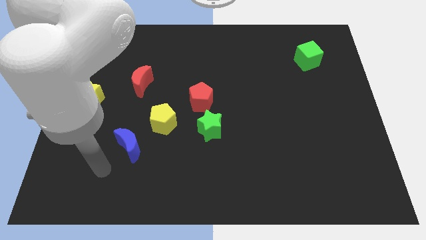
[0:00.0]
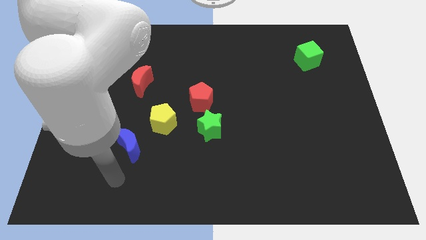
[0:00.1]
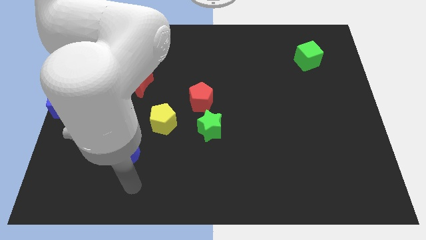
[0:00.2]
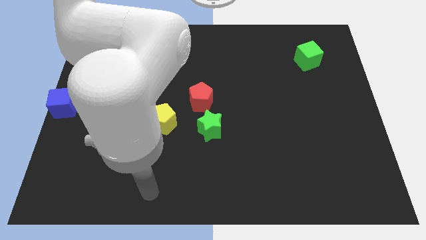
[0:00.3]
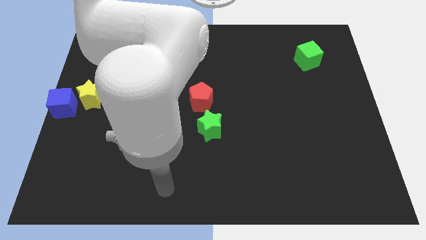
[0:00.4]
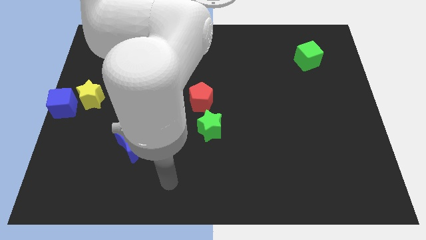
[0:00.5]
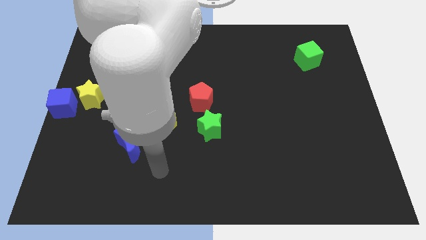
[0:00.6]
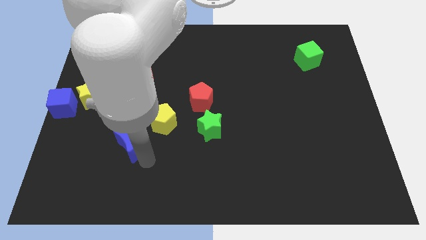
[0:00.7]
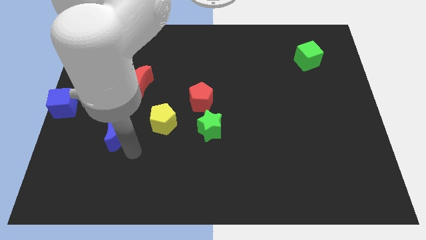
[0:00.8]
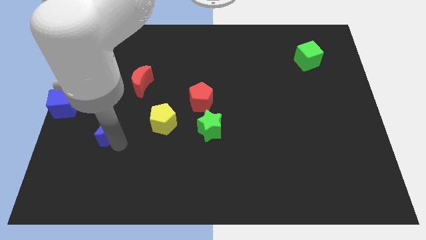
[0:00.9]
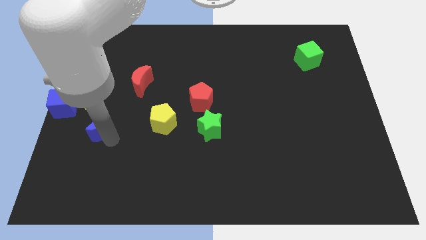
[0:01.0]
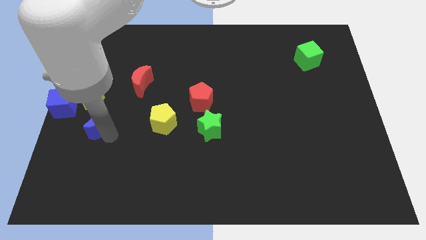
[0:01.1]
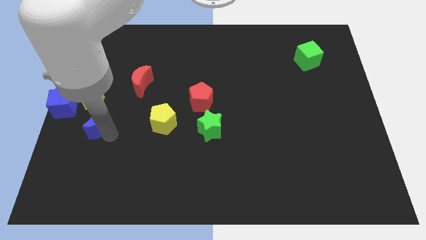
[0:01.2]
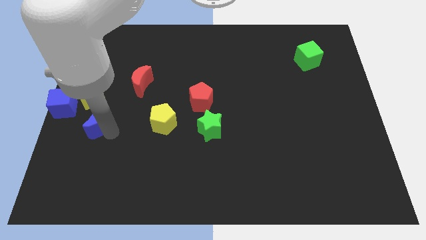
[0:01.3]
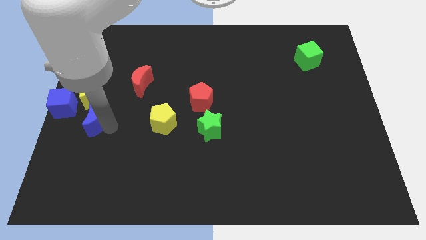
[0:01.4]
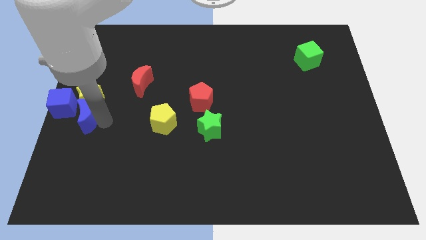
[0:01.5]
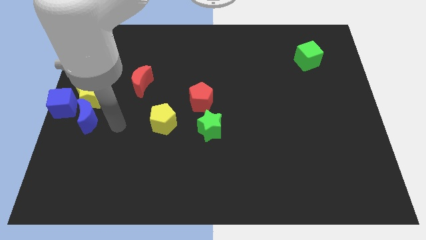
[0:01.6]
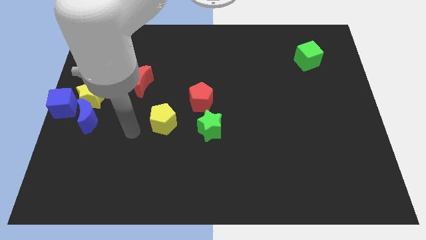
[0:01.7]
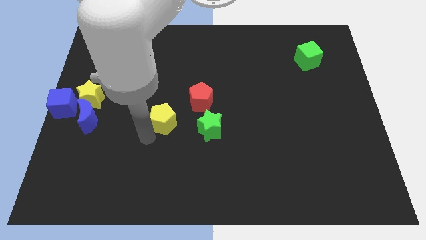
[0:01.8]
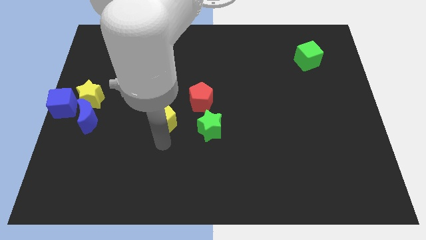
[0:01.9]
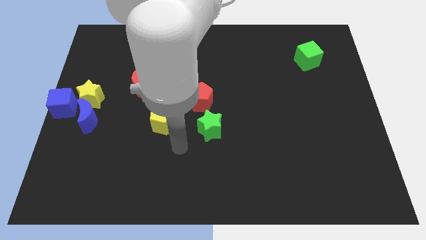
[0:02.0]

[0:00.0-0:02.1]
move blue moon below the yellow star

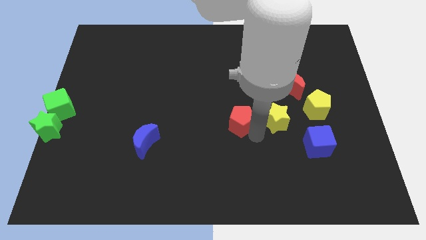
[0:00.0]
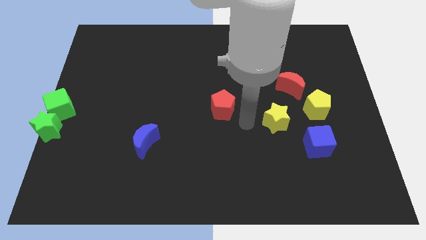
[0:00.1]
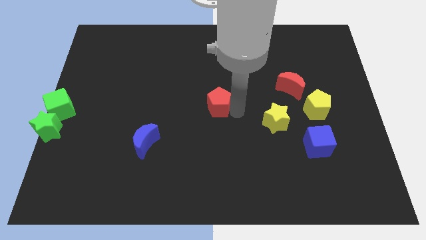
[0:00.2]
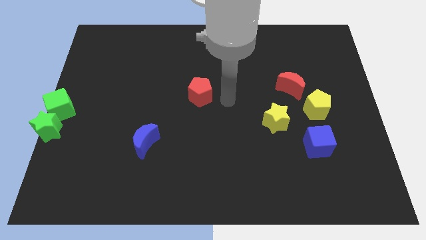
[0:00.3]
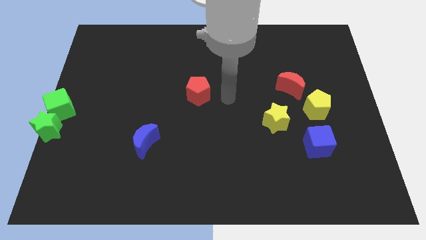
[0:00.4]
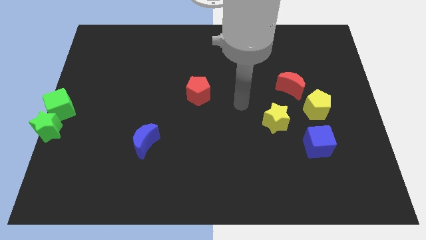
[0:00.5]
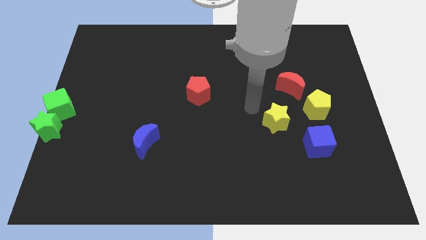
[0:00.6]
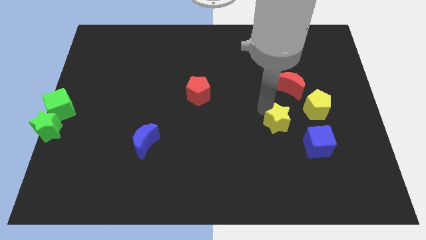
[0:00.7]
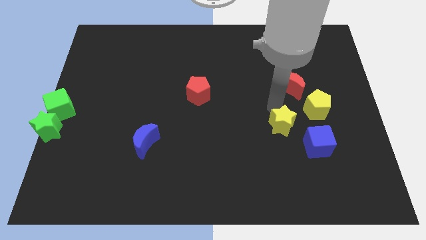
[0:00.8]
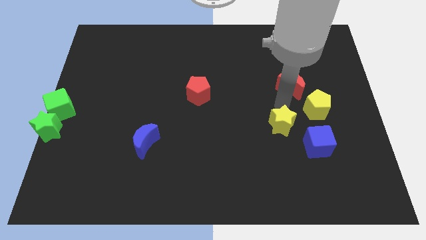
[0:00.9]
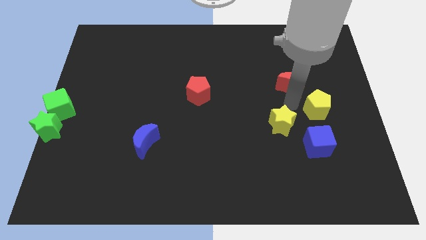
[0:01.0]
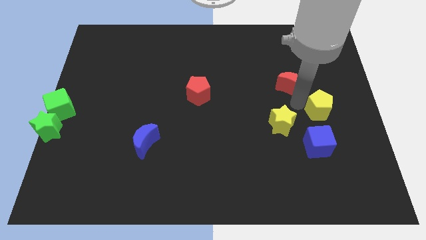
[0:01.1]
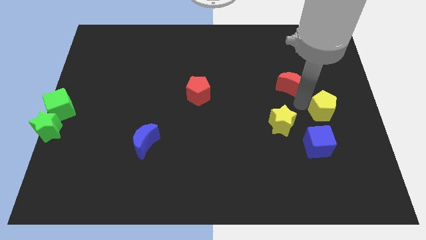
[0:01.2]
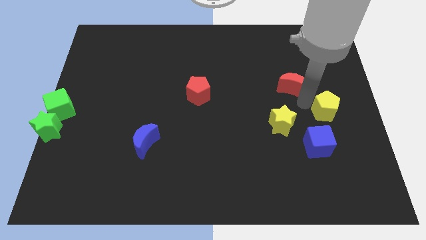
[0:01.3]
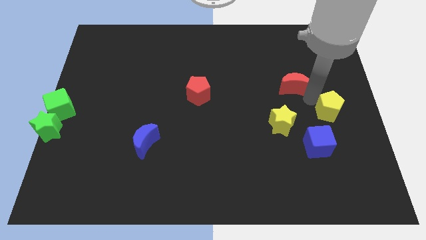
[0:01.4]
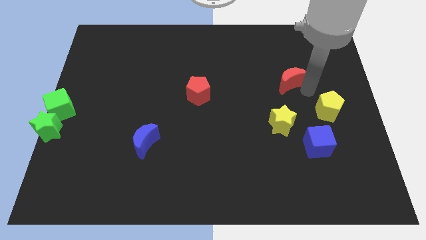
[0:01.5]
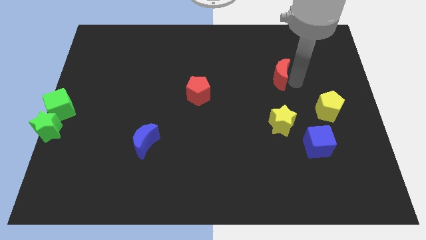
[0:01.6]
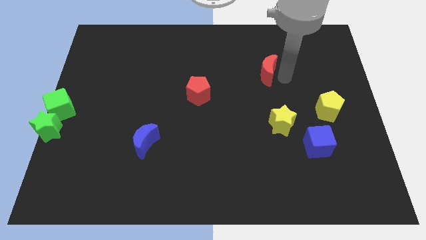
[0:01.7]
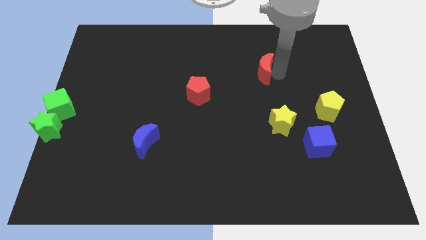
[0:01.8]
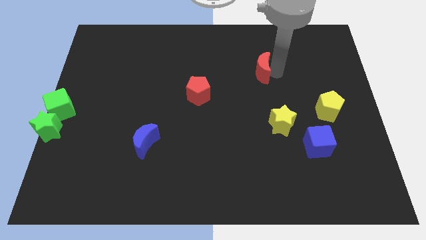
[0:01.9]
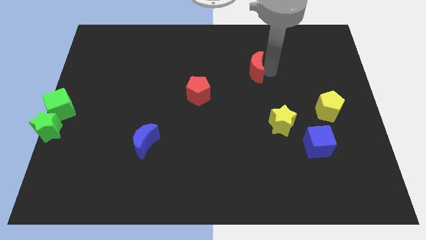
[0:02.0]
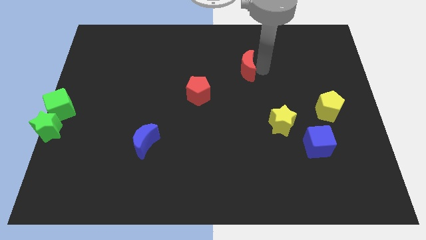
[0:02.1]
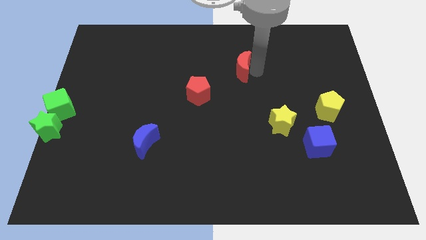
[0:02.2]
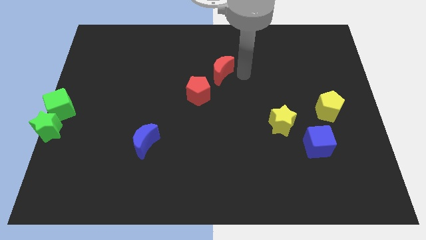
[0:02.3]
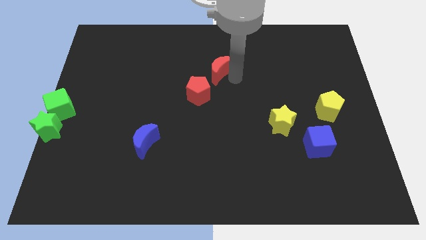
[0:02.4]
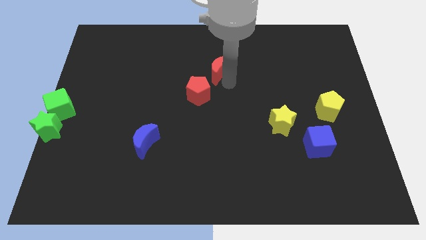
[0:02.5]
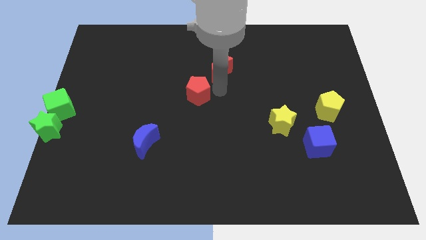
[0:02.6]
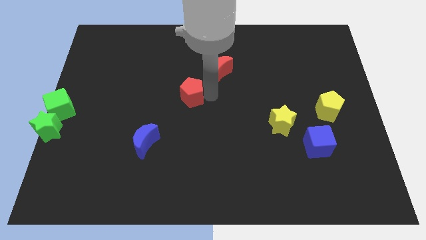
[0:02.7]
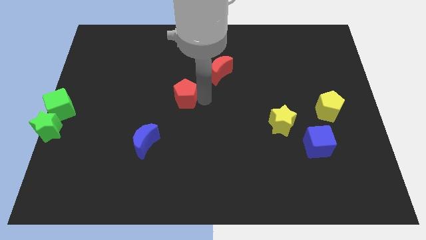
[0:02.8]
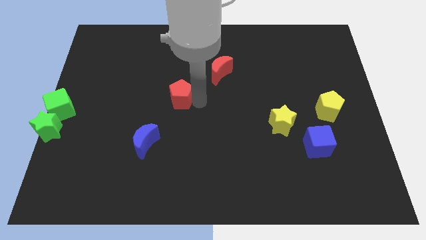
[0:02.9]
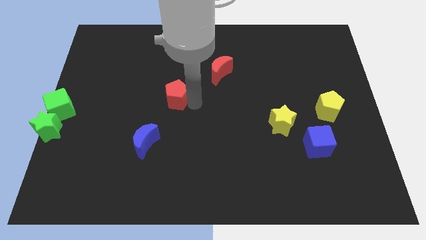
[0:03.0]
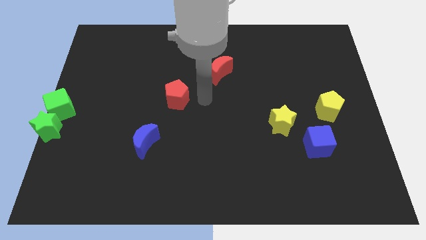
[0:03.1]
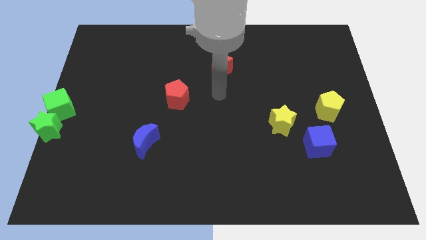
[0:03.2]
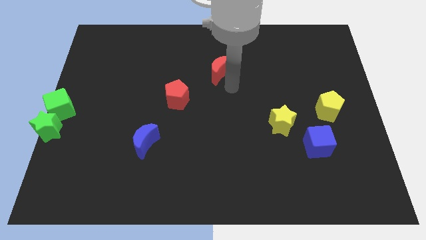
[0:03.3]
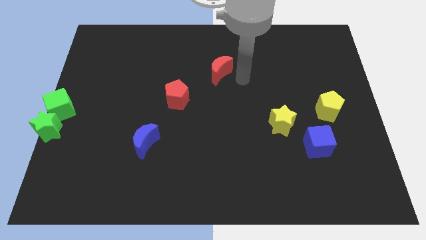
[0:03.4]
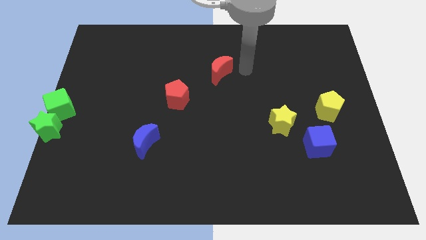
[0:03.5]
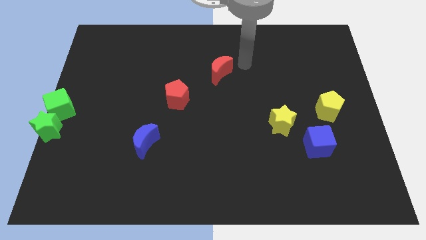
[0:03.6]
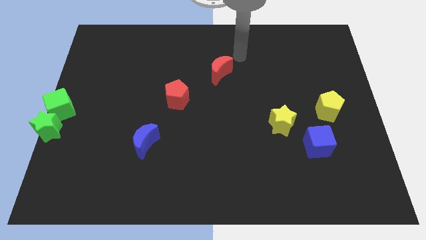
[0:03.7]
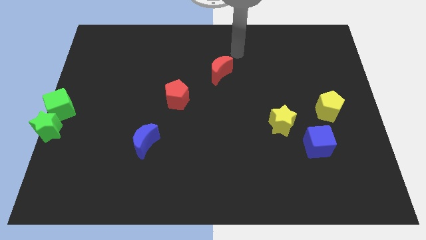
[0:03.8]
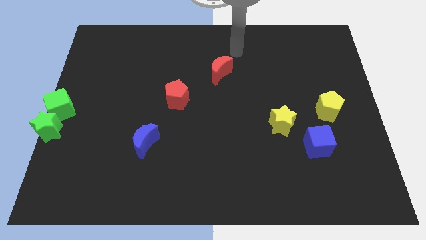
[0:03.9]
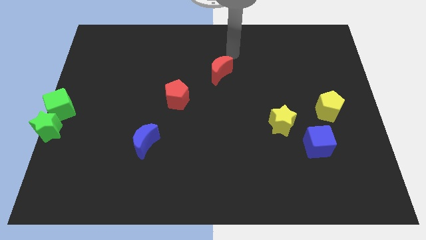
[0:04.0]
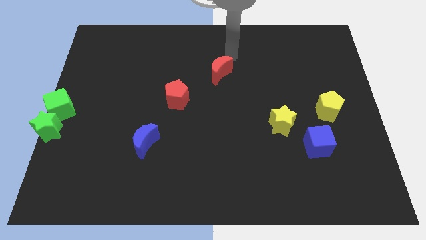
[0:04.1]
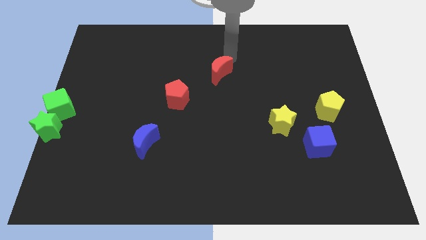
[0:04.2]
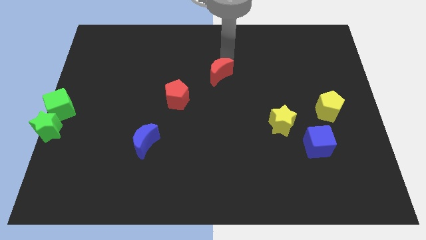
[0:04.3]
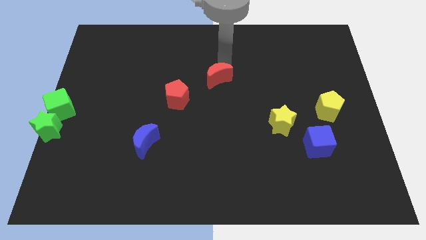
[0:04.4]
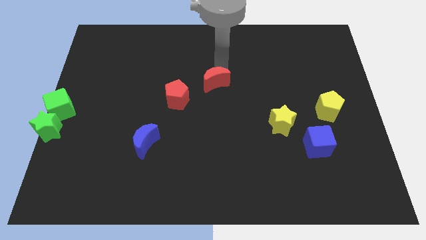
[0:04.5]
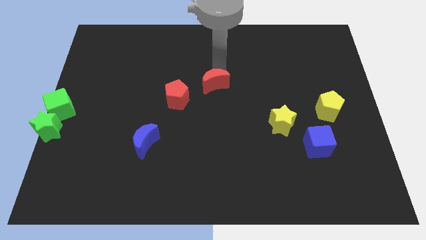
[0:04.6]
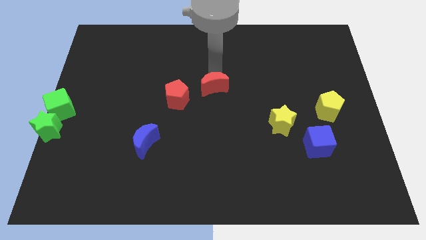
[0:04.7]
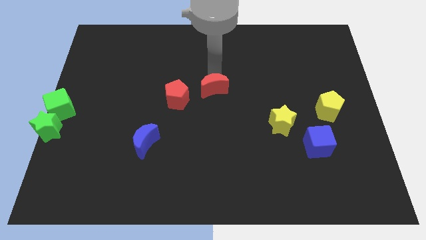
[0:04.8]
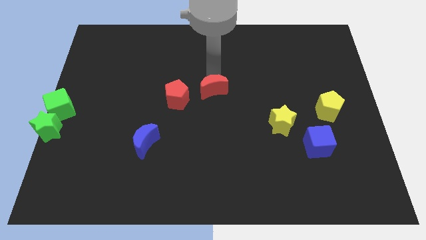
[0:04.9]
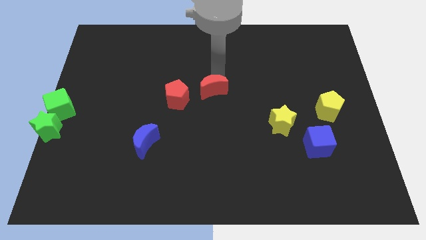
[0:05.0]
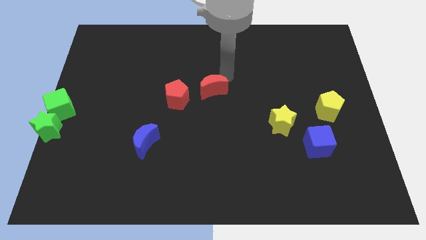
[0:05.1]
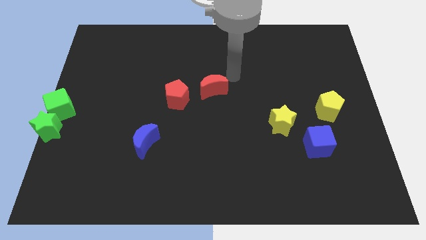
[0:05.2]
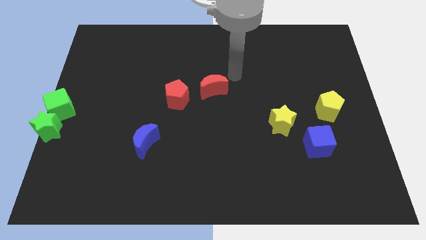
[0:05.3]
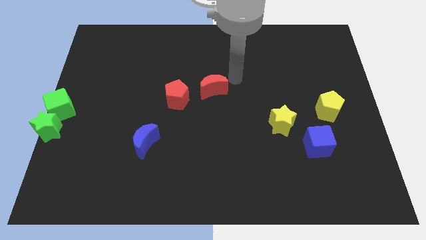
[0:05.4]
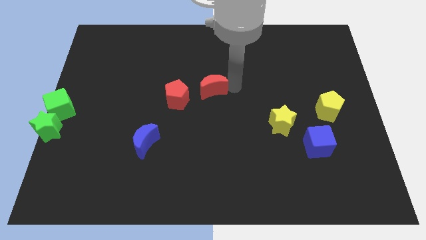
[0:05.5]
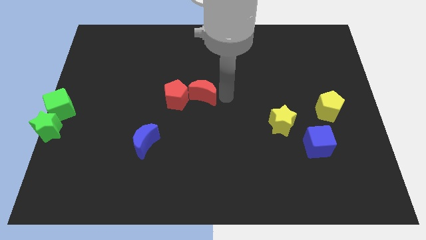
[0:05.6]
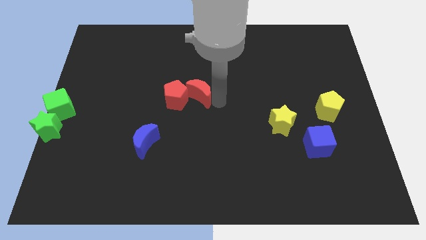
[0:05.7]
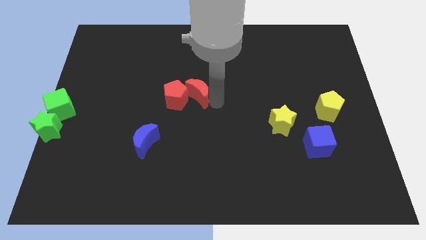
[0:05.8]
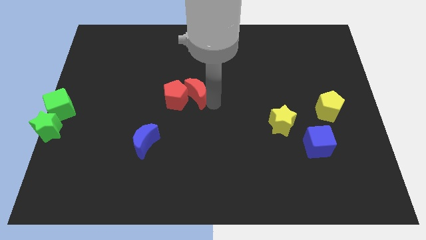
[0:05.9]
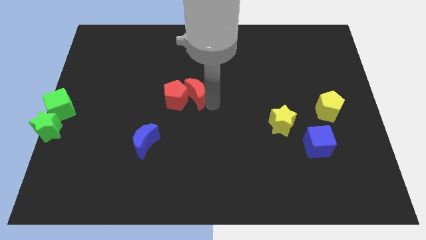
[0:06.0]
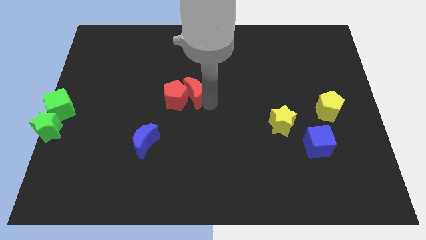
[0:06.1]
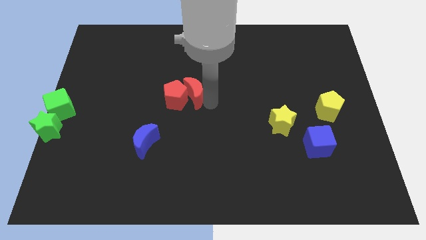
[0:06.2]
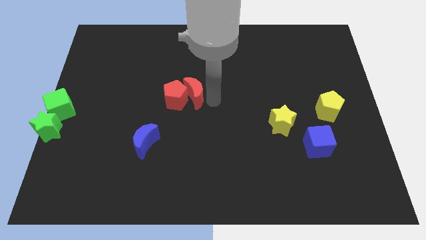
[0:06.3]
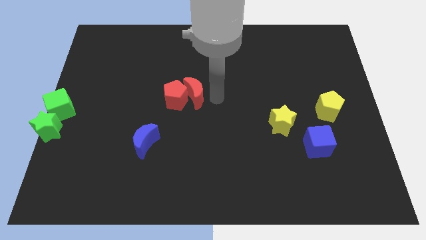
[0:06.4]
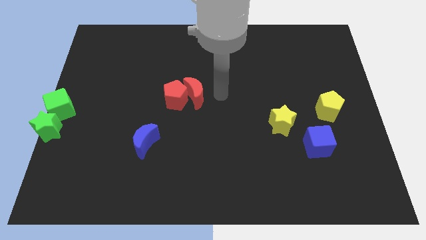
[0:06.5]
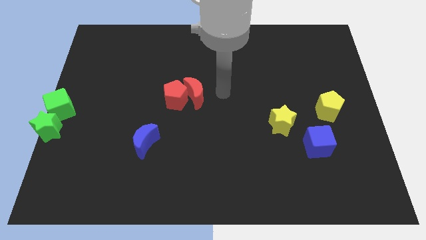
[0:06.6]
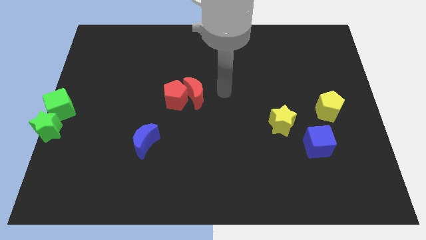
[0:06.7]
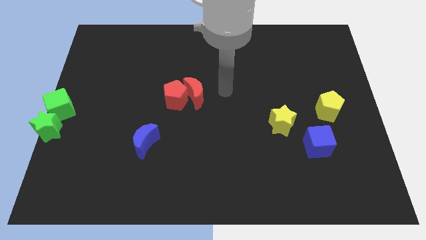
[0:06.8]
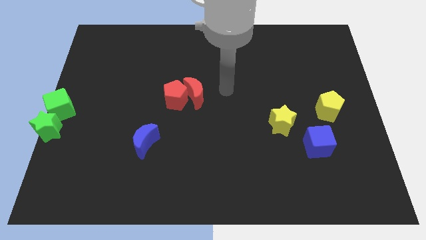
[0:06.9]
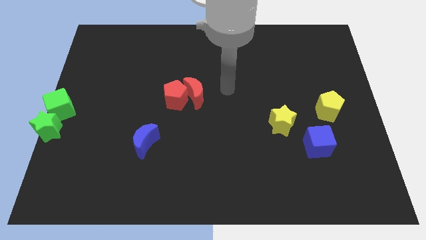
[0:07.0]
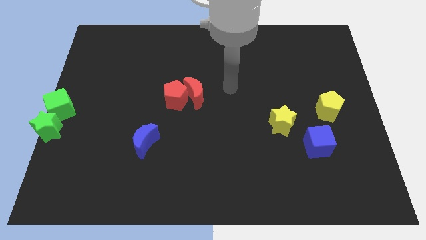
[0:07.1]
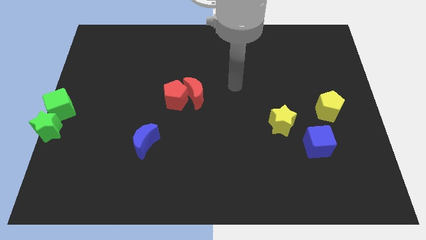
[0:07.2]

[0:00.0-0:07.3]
push the red crescent into the red pentagon
